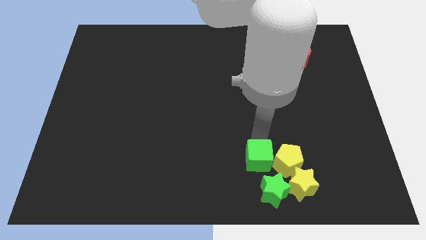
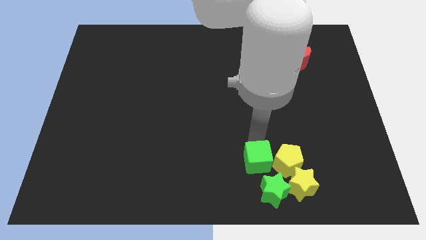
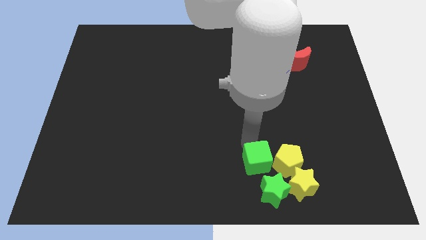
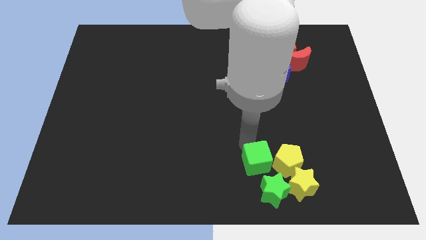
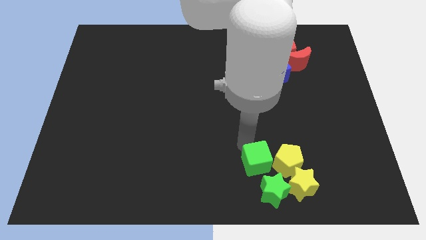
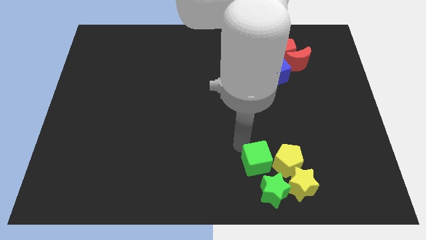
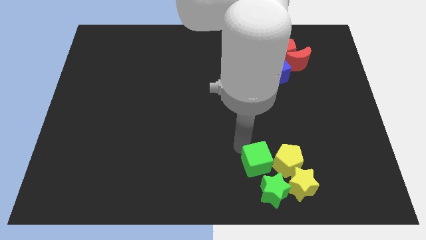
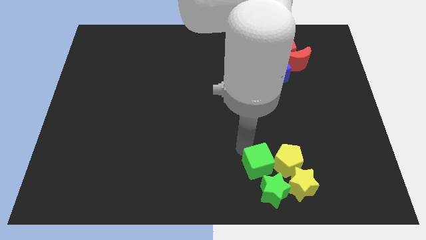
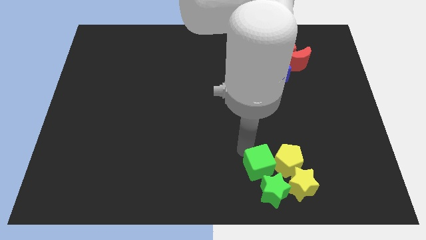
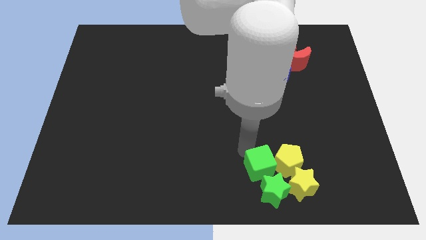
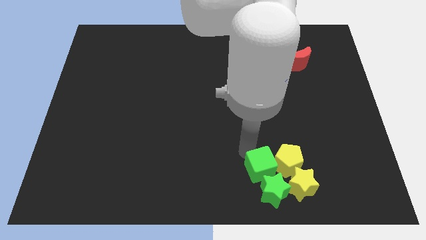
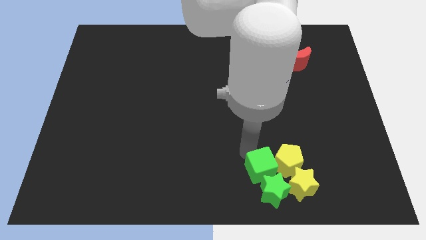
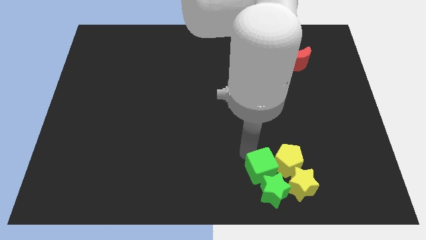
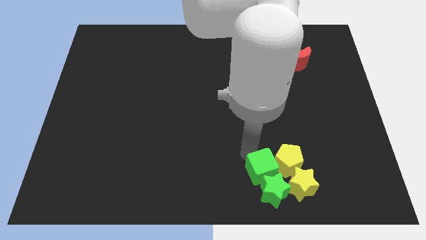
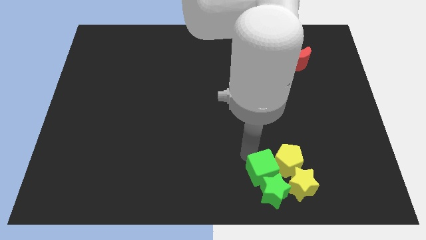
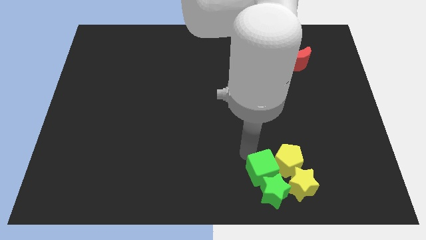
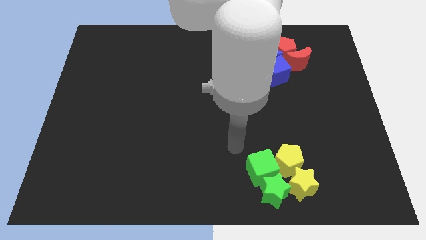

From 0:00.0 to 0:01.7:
move green cube in between the yellow pentagon and green star

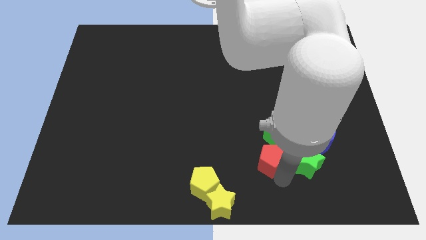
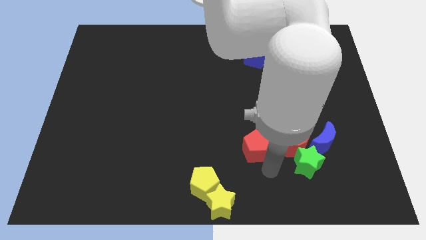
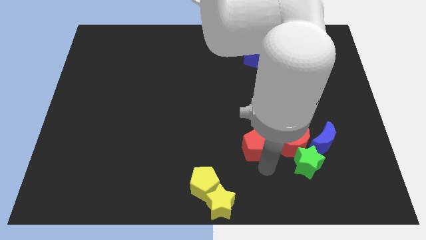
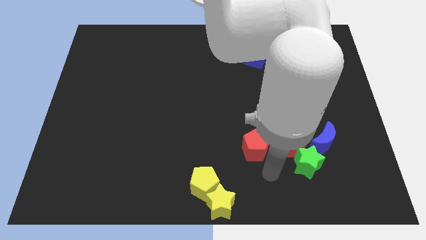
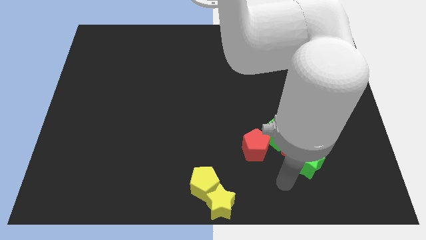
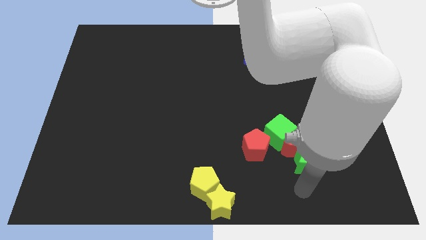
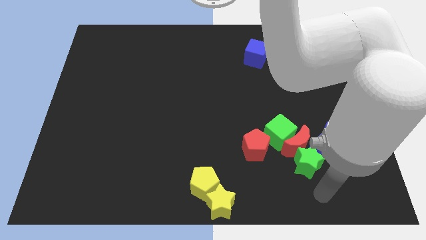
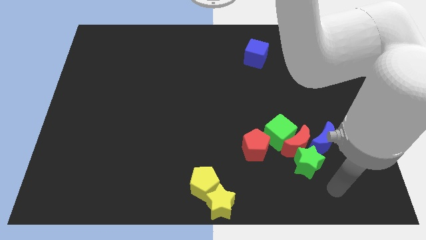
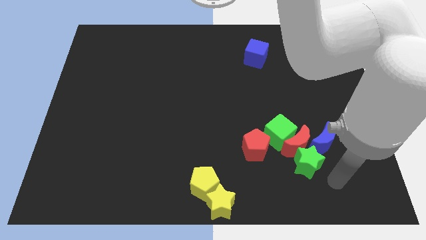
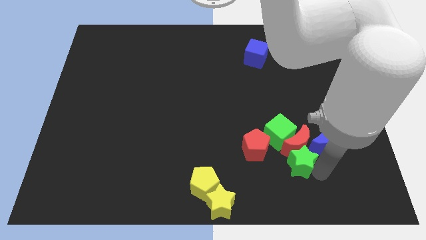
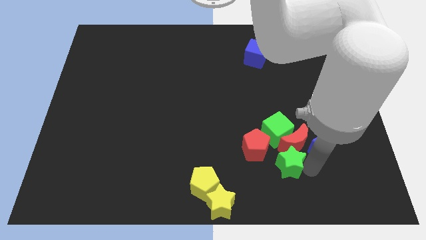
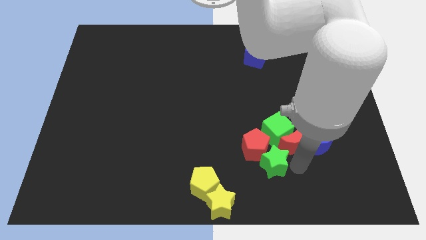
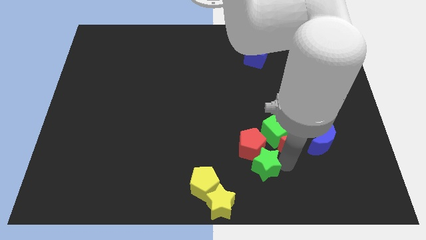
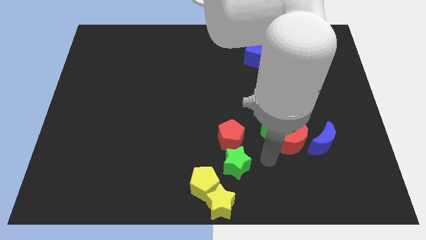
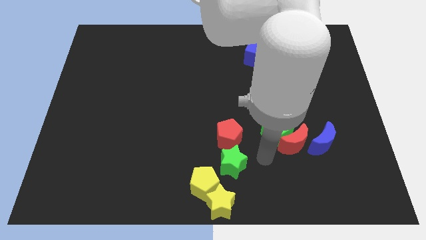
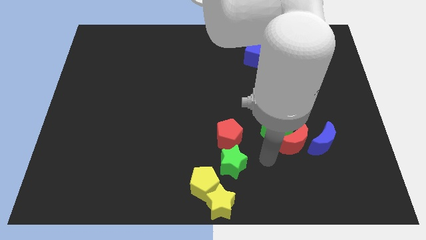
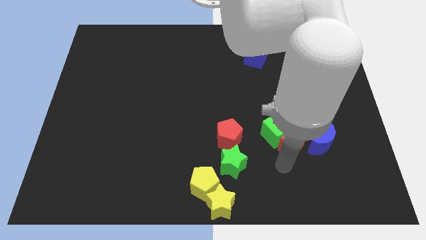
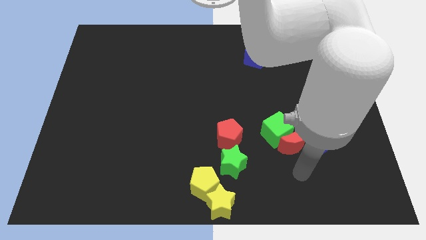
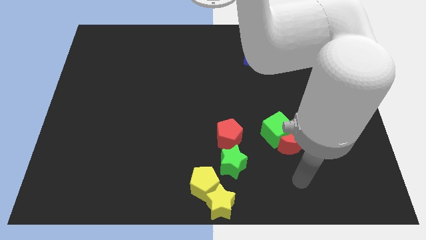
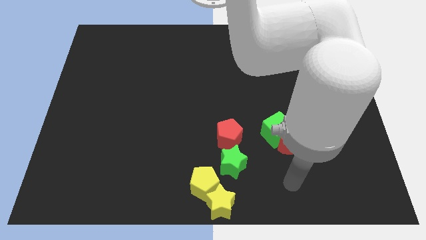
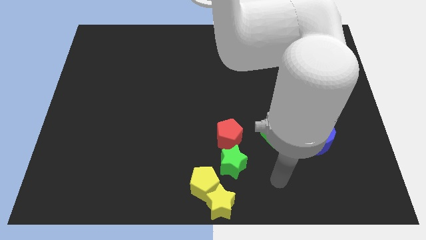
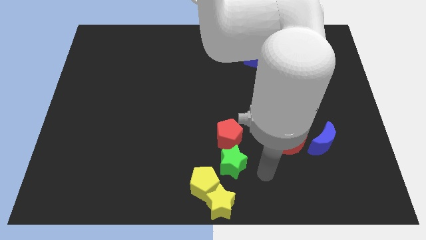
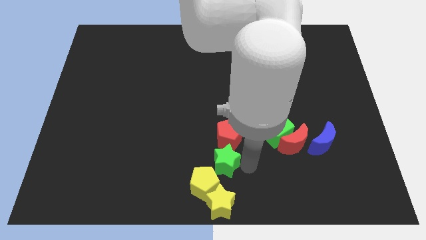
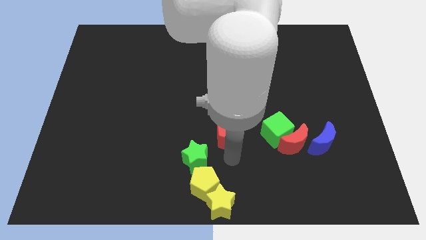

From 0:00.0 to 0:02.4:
place the green star below the red pentagon

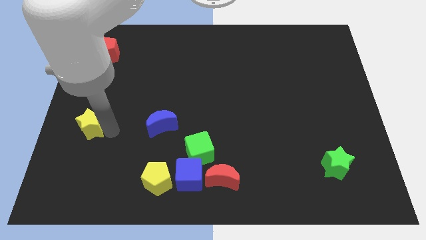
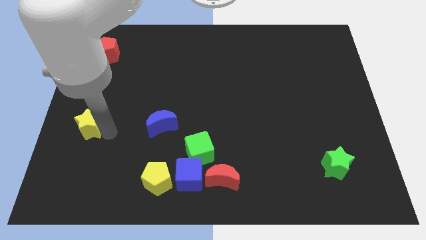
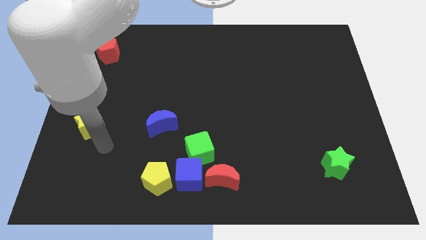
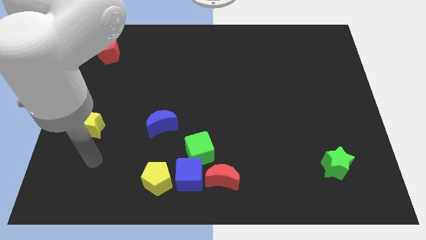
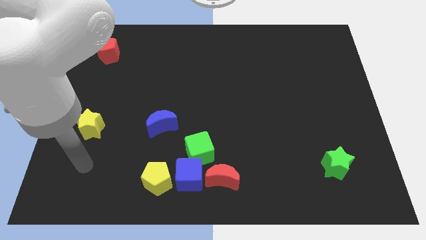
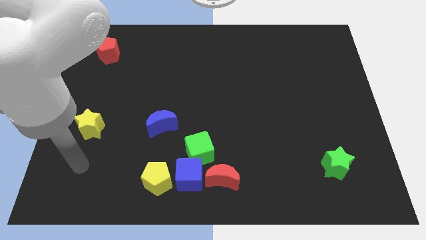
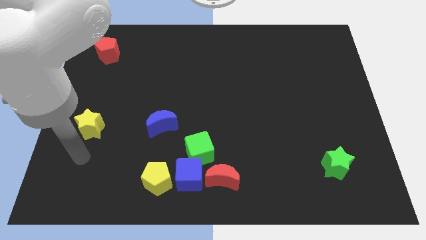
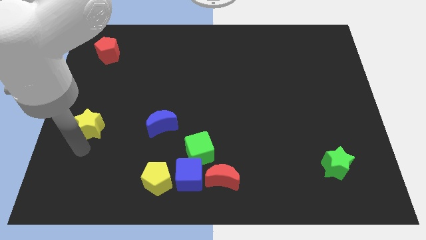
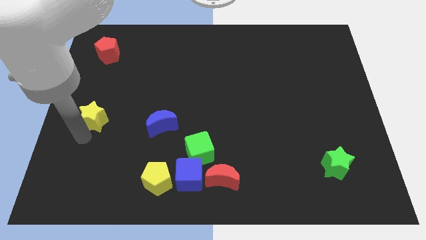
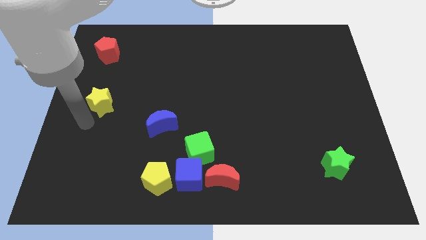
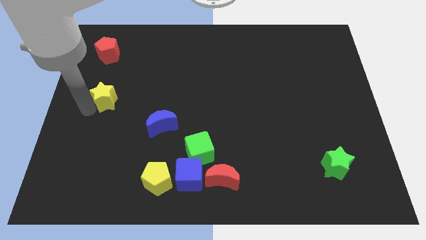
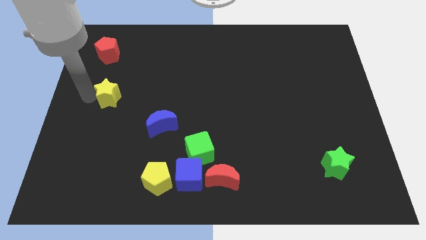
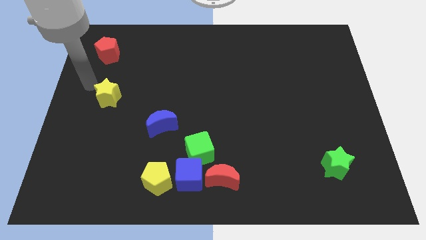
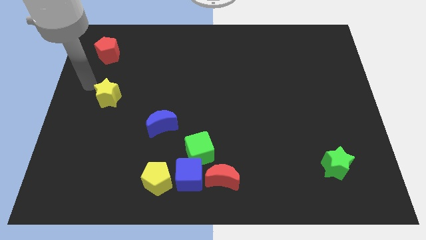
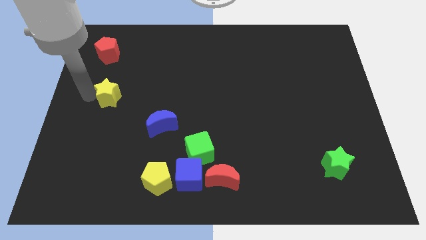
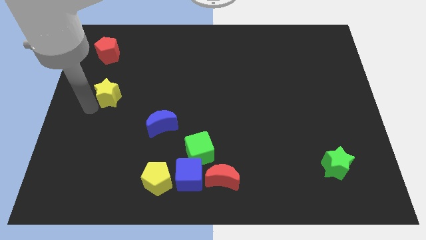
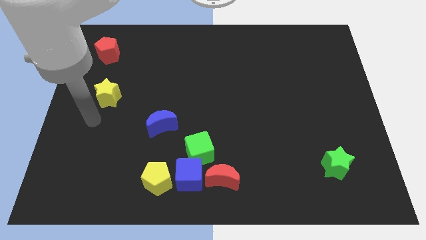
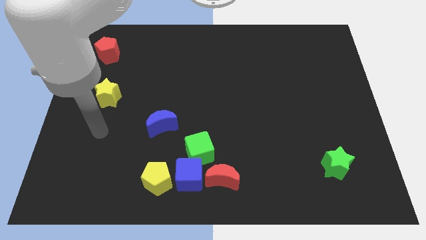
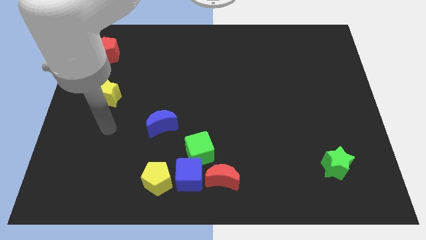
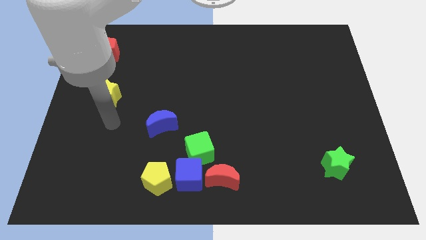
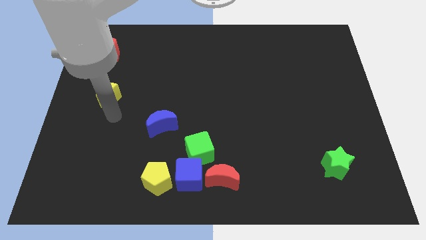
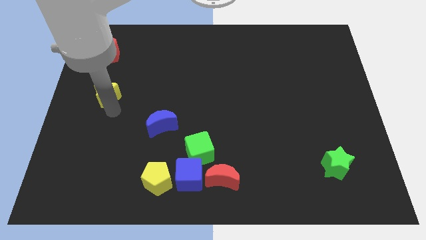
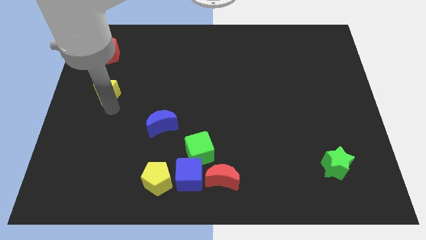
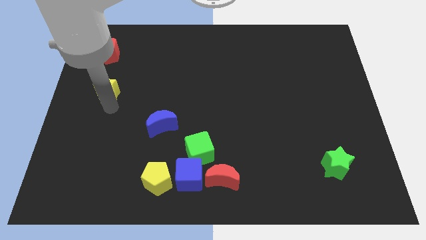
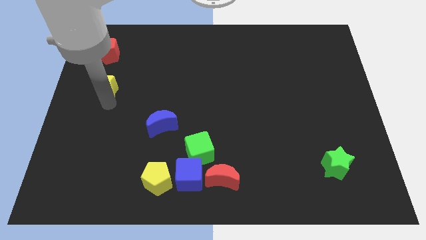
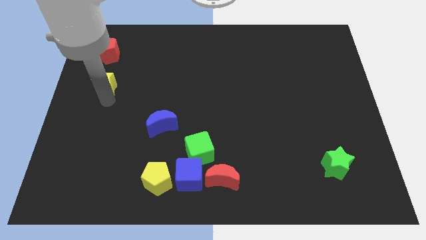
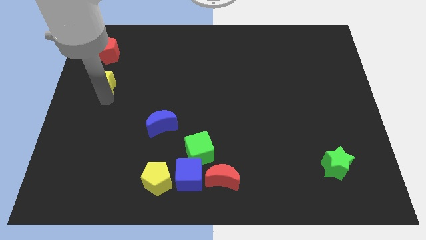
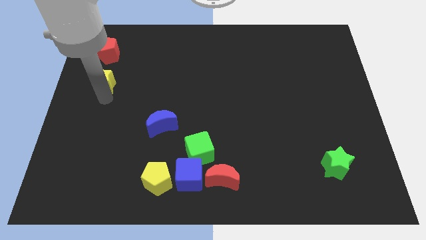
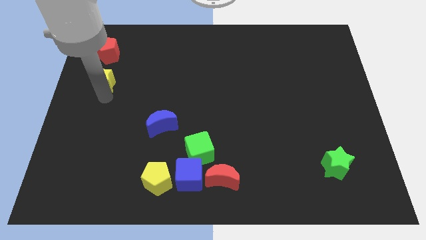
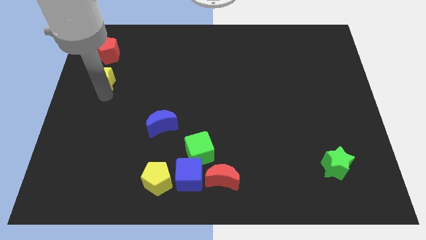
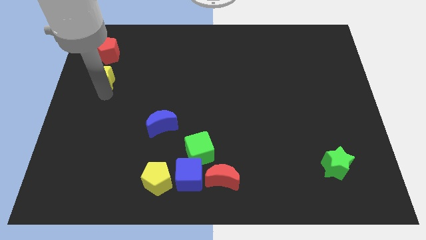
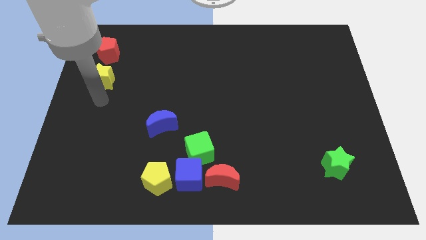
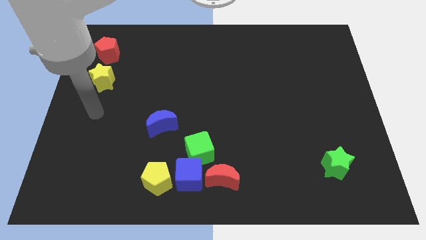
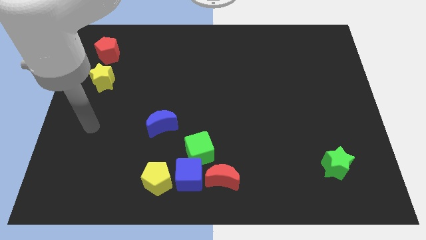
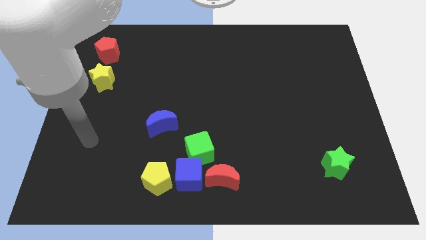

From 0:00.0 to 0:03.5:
push yellow star below the red pentagon

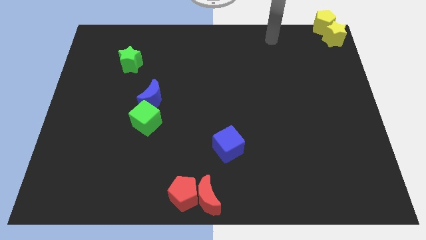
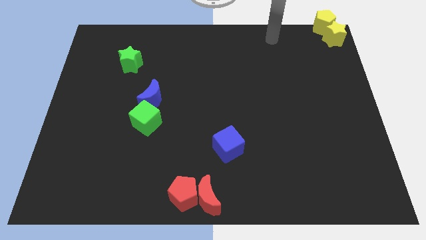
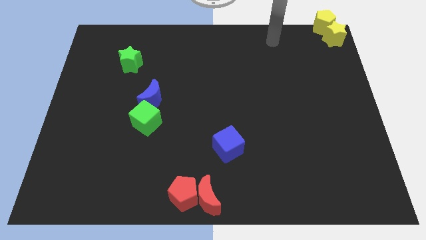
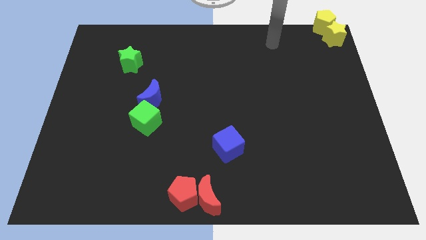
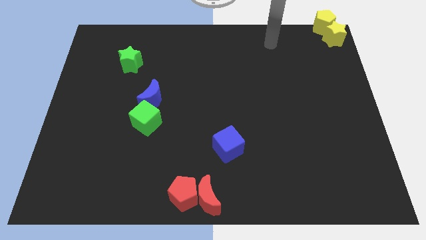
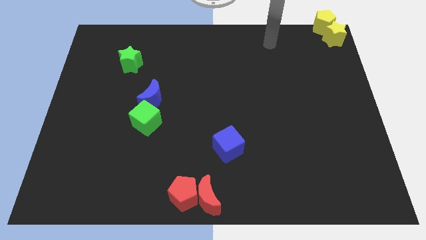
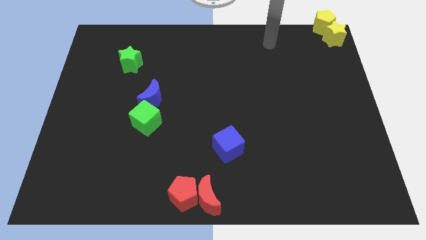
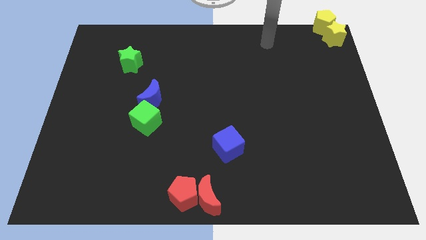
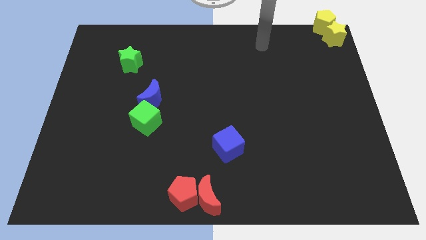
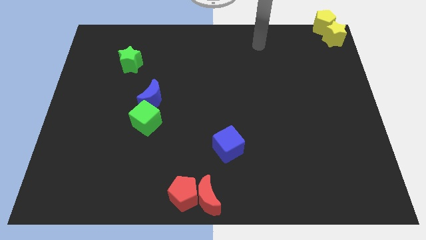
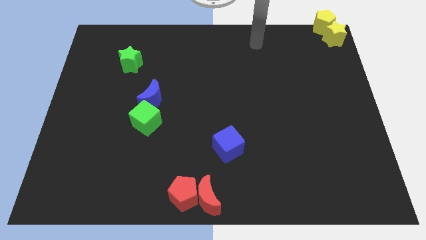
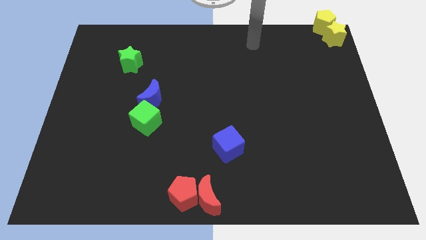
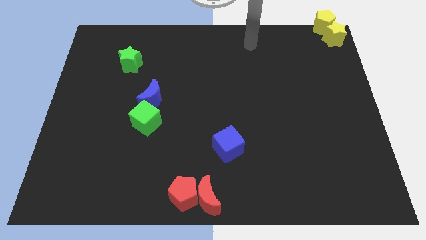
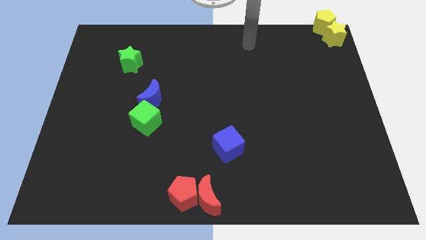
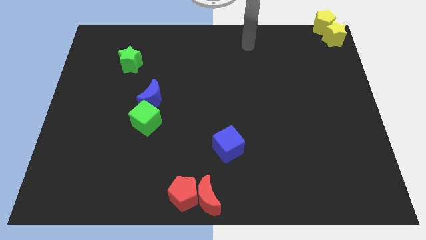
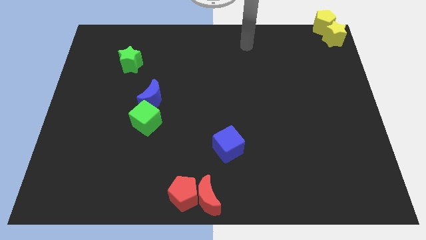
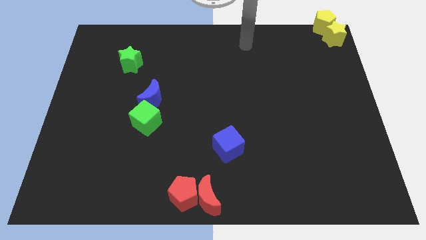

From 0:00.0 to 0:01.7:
move the arm away from yellow star
